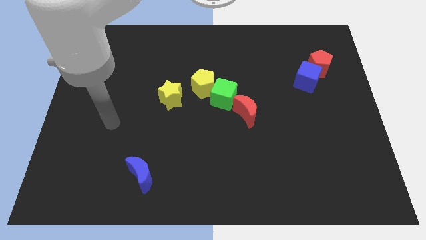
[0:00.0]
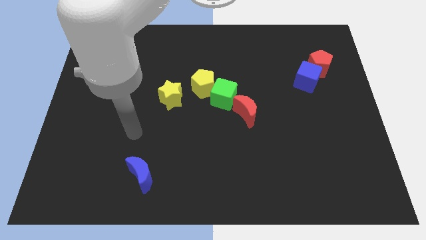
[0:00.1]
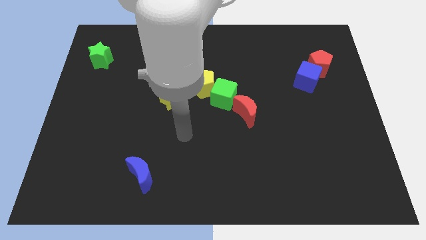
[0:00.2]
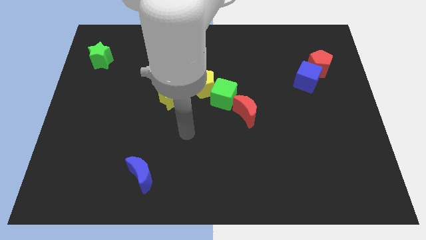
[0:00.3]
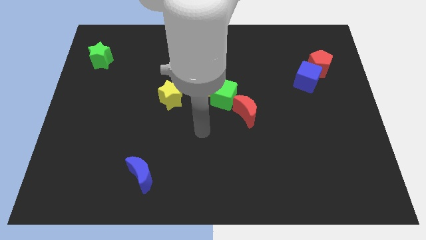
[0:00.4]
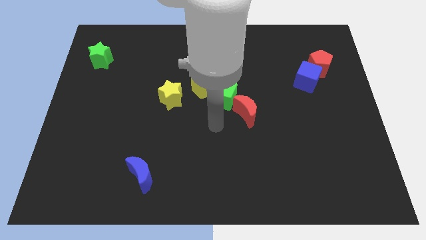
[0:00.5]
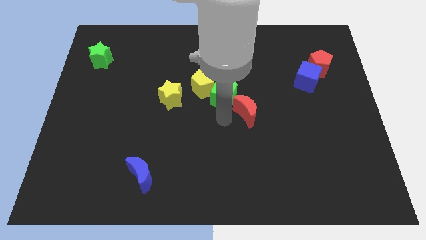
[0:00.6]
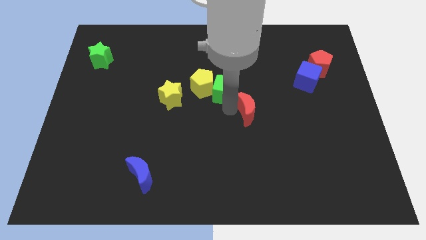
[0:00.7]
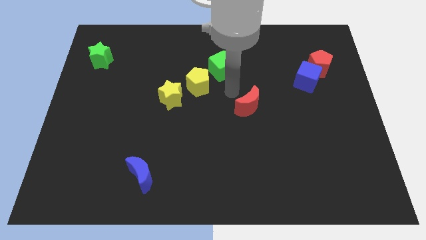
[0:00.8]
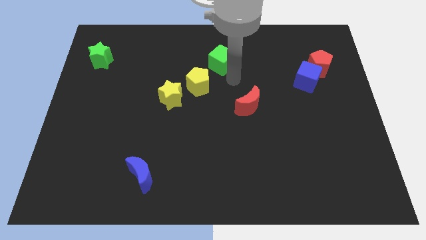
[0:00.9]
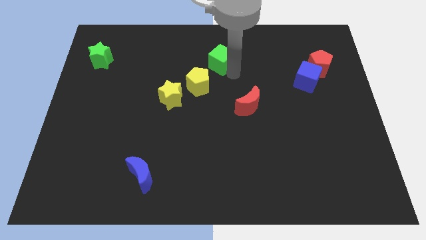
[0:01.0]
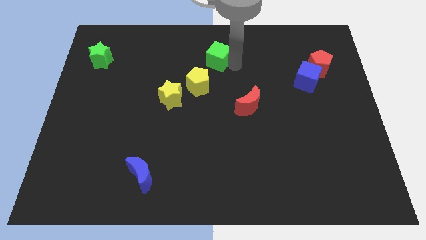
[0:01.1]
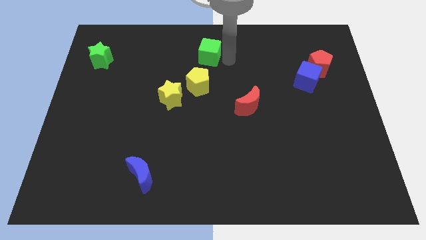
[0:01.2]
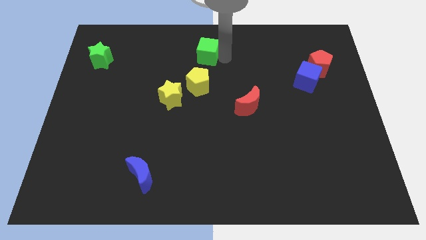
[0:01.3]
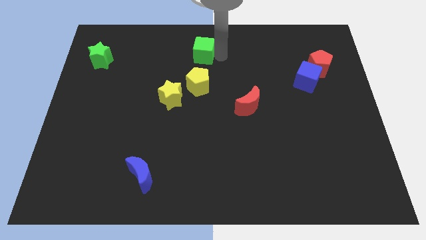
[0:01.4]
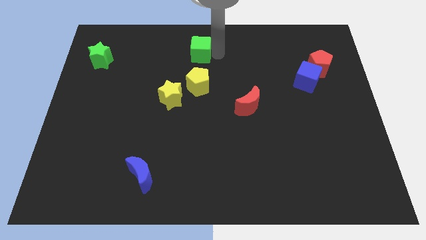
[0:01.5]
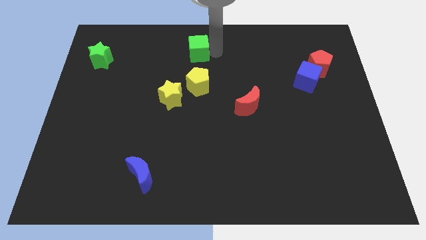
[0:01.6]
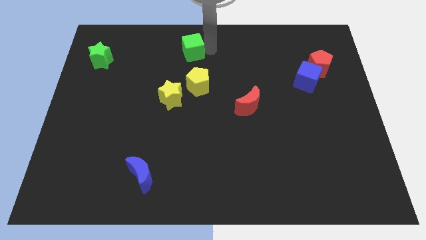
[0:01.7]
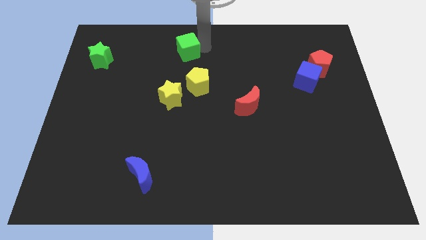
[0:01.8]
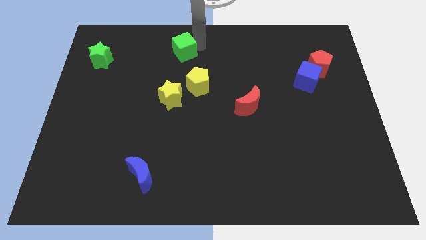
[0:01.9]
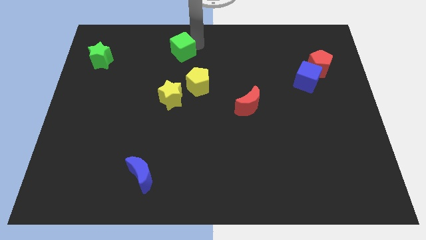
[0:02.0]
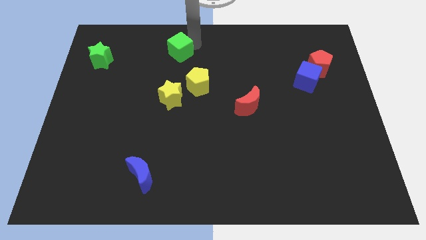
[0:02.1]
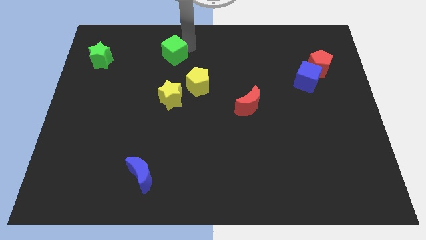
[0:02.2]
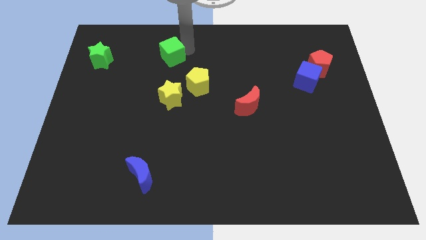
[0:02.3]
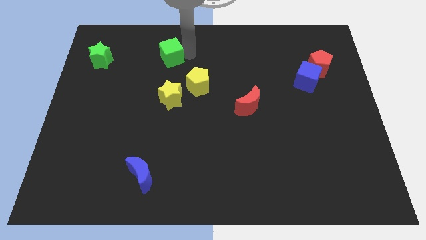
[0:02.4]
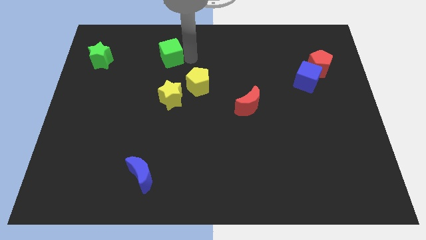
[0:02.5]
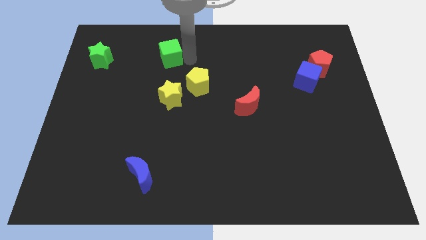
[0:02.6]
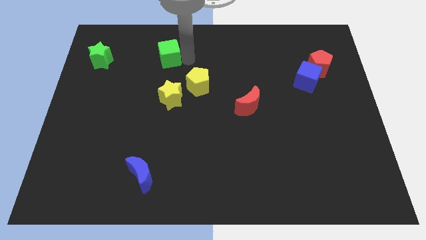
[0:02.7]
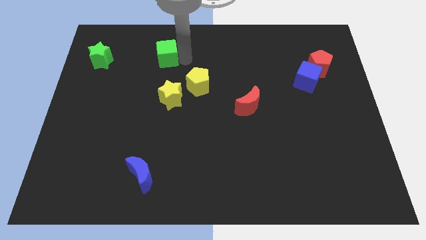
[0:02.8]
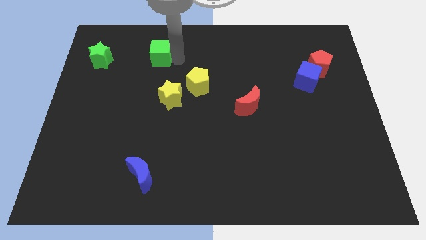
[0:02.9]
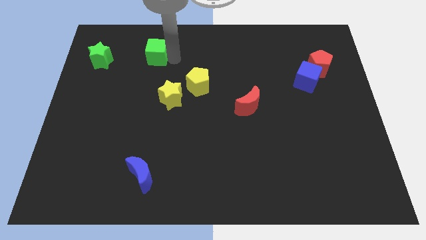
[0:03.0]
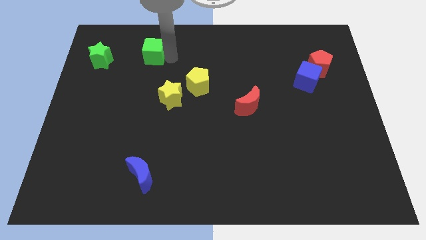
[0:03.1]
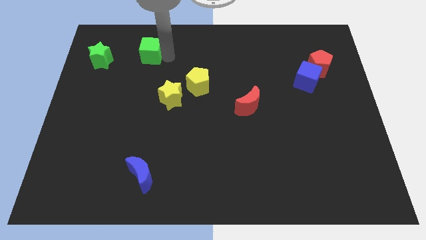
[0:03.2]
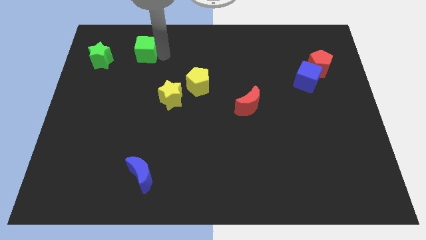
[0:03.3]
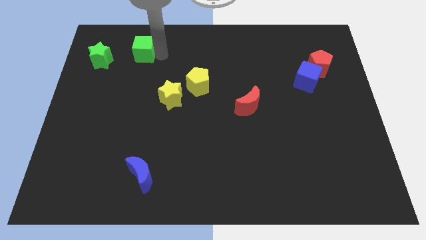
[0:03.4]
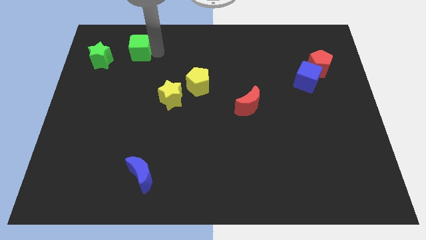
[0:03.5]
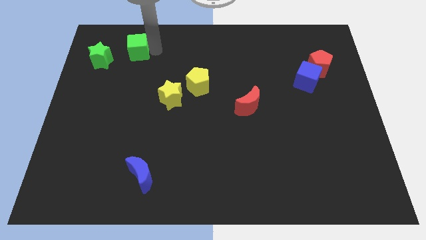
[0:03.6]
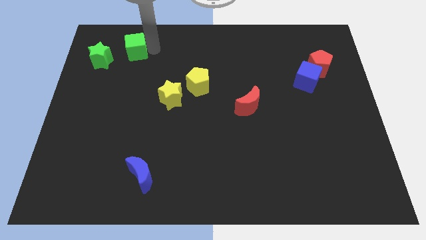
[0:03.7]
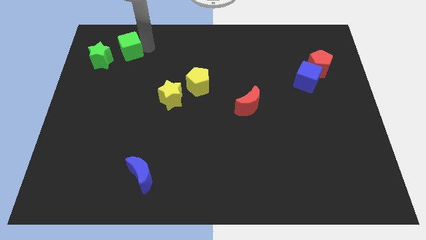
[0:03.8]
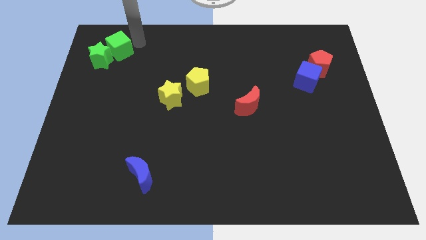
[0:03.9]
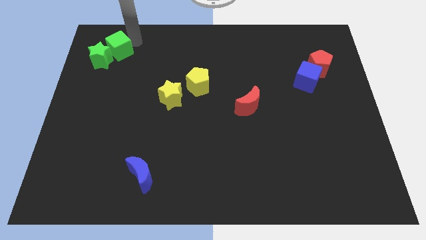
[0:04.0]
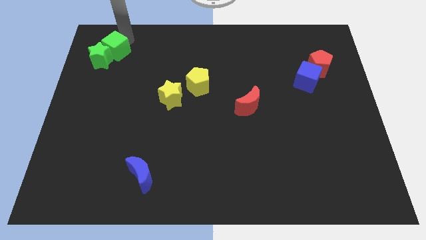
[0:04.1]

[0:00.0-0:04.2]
slide the green cube close to the green star

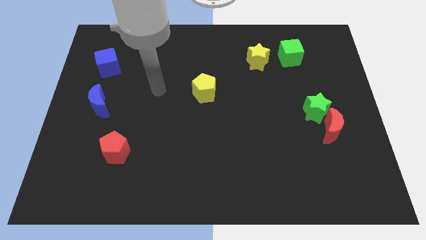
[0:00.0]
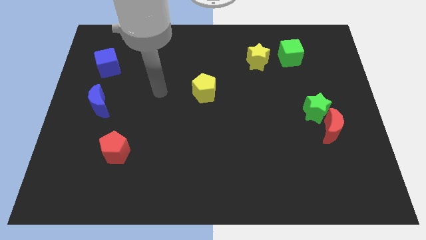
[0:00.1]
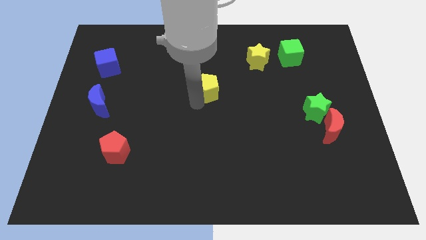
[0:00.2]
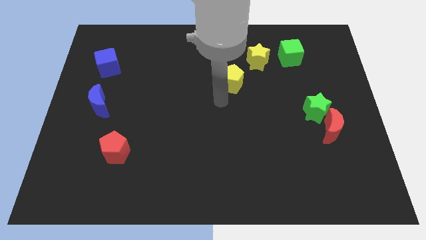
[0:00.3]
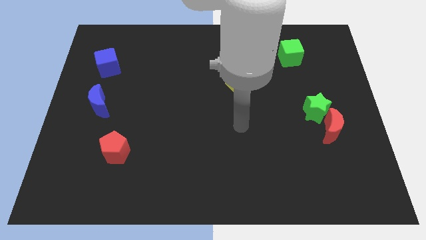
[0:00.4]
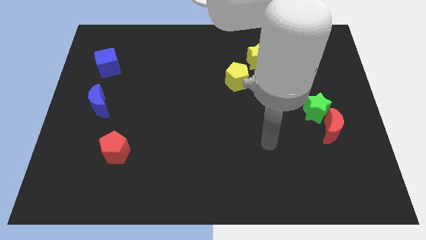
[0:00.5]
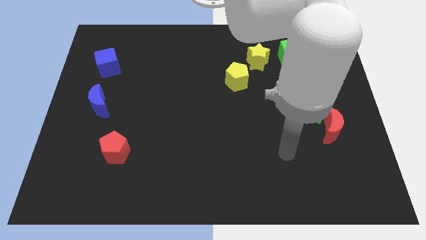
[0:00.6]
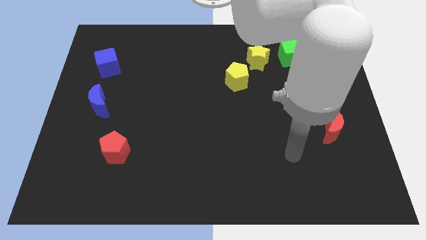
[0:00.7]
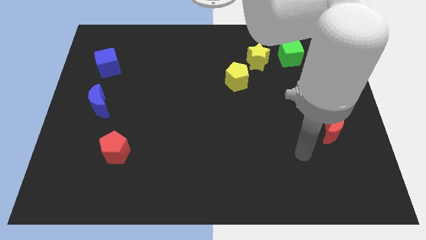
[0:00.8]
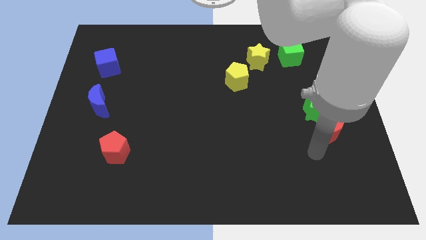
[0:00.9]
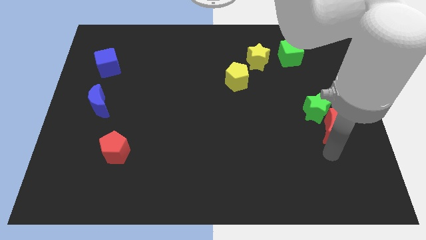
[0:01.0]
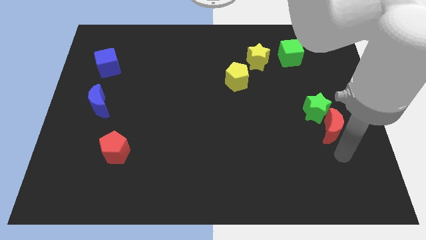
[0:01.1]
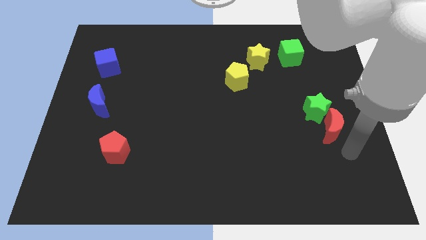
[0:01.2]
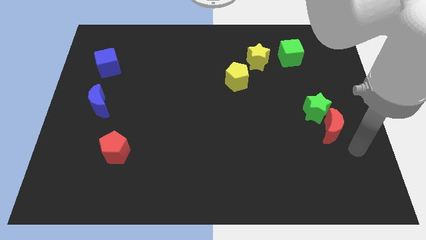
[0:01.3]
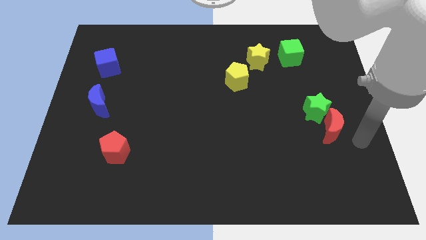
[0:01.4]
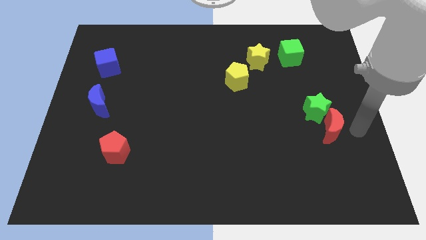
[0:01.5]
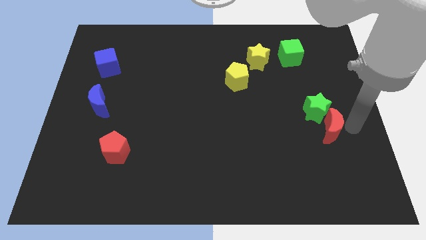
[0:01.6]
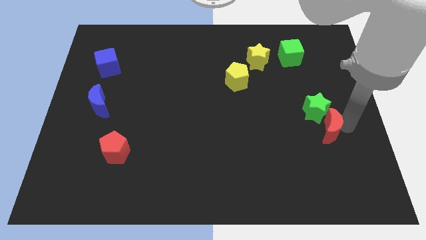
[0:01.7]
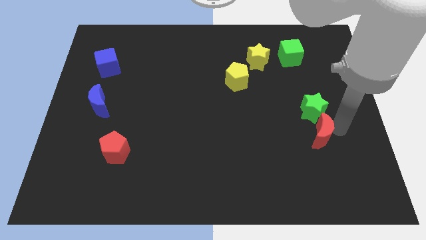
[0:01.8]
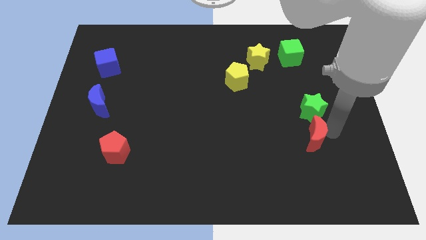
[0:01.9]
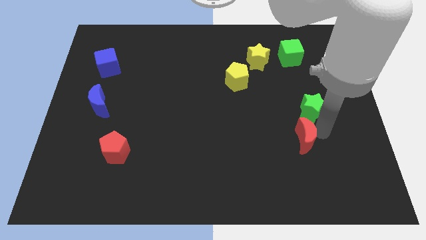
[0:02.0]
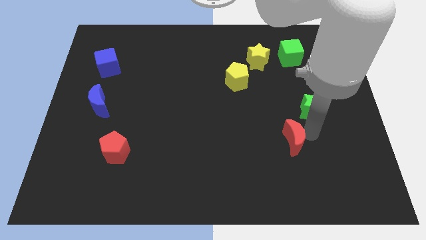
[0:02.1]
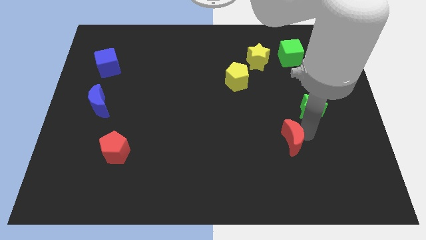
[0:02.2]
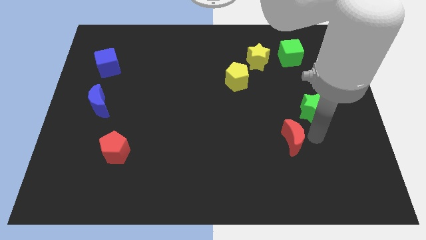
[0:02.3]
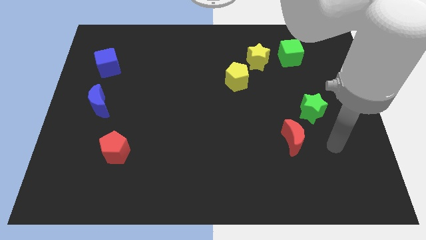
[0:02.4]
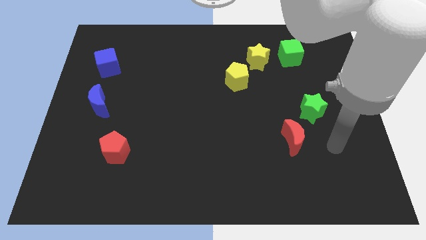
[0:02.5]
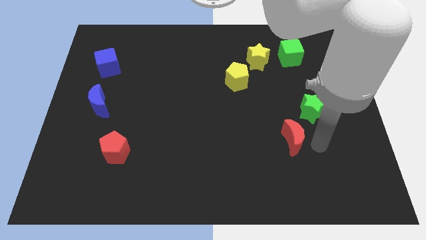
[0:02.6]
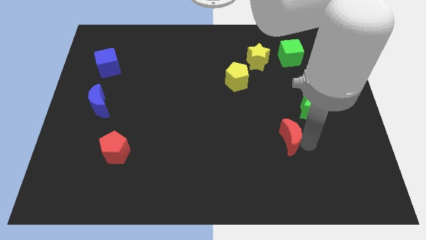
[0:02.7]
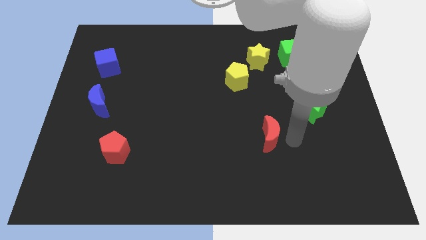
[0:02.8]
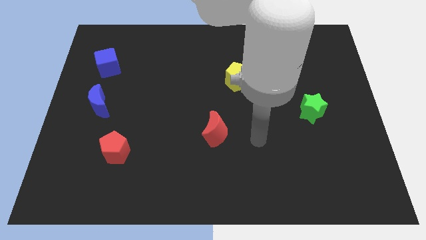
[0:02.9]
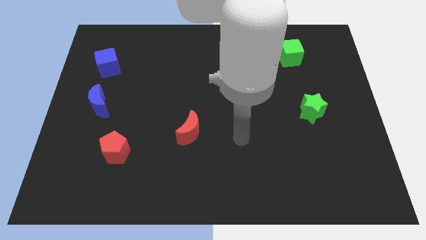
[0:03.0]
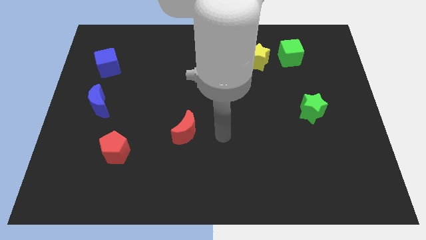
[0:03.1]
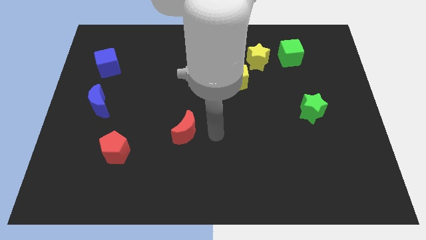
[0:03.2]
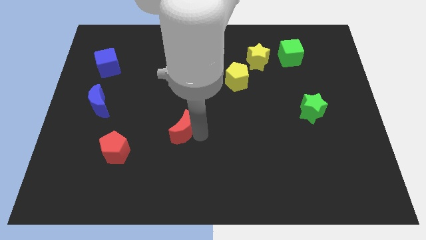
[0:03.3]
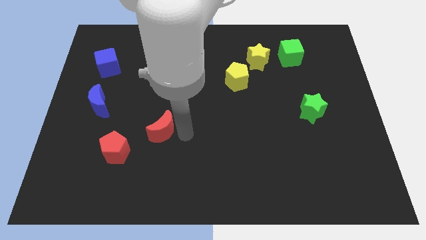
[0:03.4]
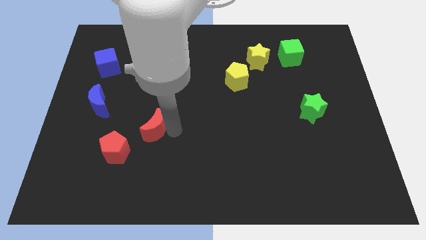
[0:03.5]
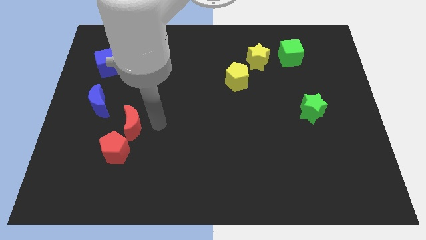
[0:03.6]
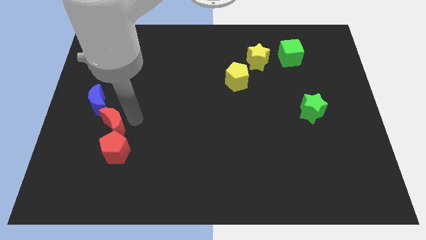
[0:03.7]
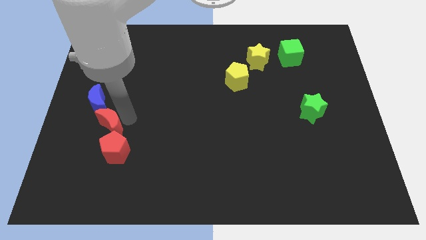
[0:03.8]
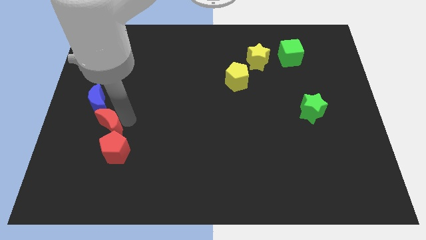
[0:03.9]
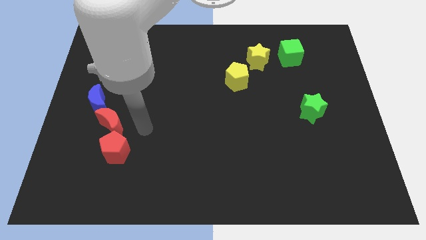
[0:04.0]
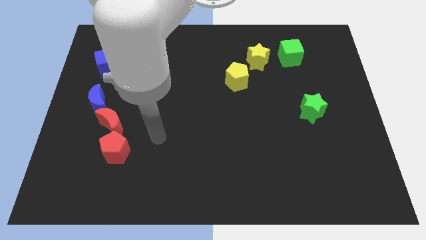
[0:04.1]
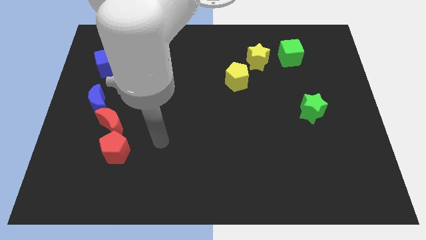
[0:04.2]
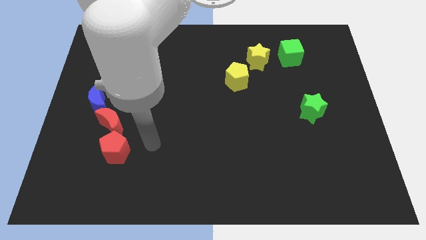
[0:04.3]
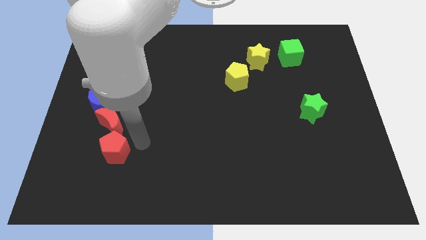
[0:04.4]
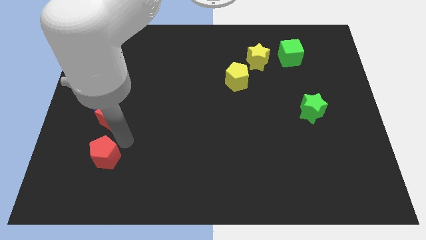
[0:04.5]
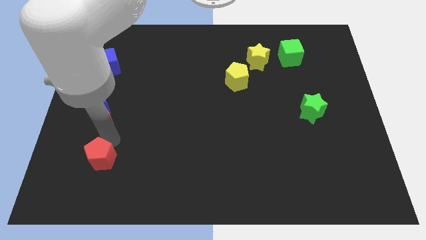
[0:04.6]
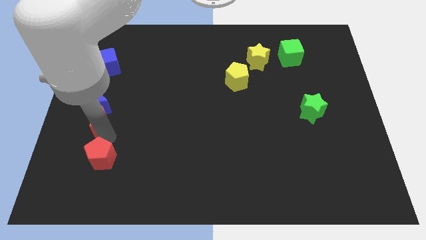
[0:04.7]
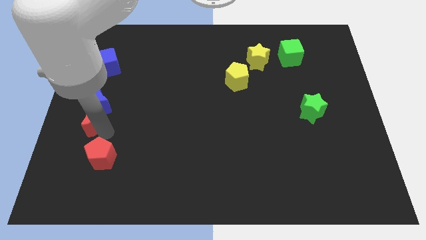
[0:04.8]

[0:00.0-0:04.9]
slide the red moon towards the blue moon
